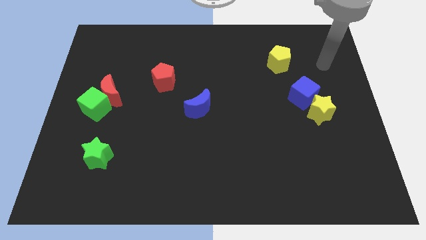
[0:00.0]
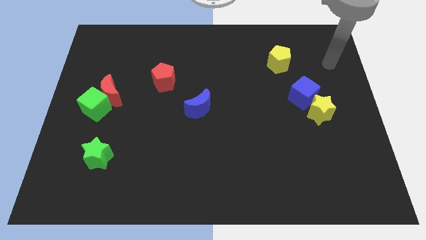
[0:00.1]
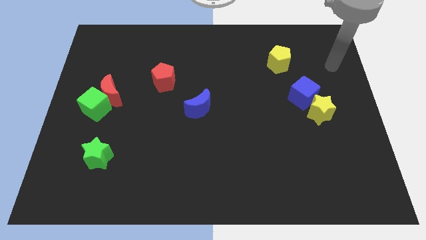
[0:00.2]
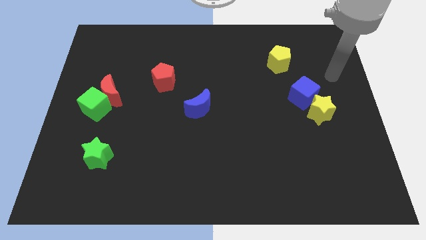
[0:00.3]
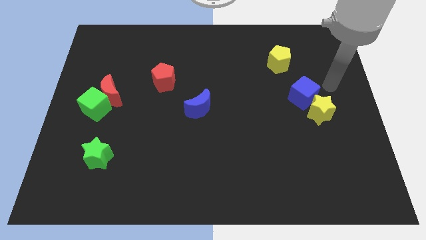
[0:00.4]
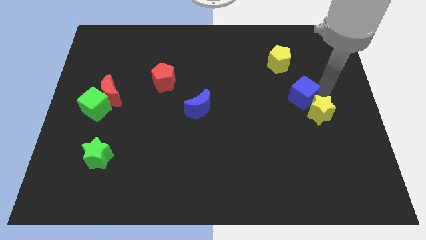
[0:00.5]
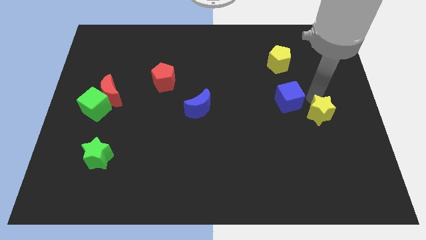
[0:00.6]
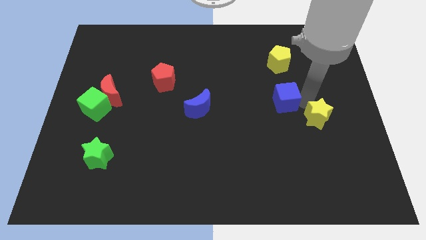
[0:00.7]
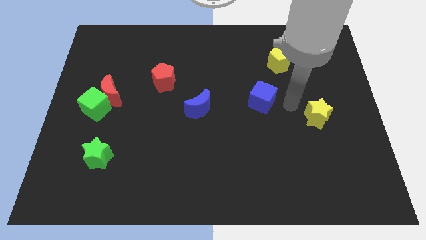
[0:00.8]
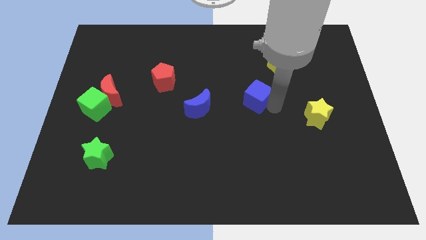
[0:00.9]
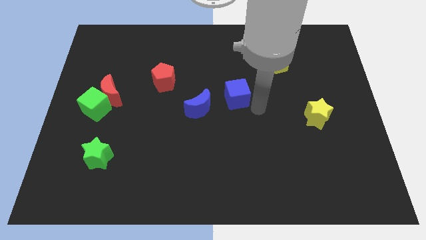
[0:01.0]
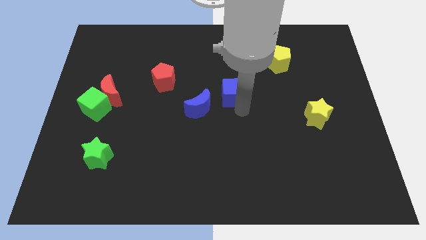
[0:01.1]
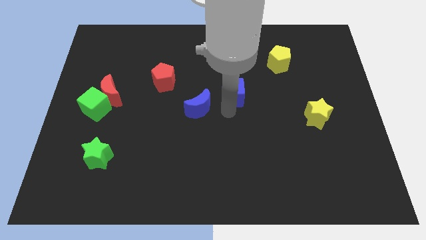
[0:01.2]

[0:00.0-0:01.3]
place the blue cube at the center of the board

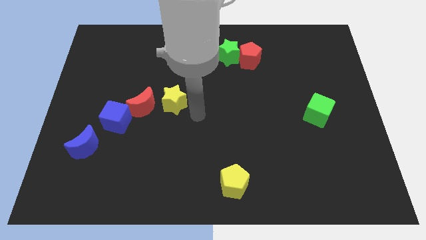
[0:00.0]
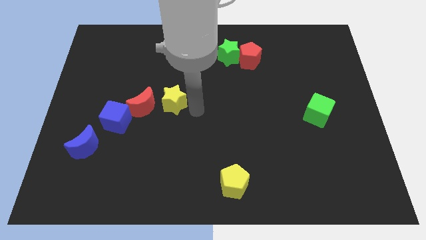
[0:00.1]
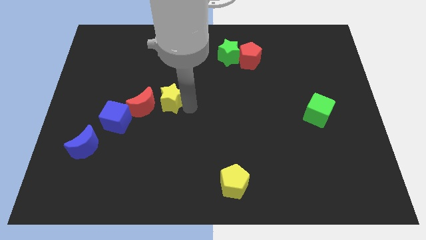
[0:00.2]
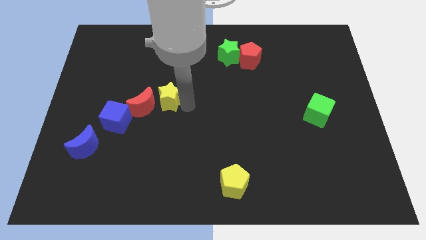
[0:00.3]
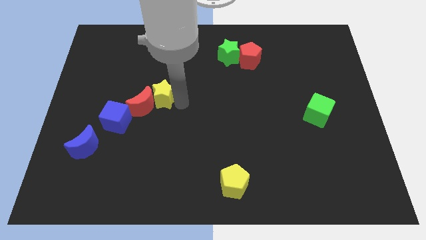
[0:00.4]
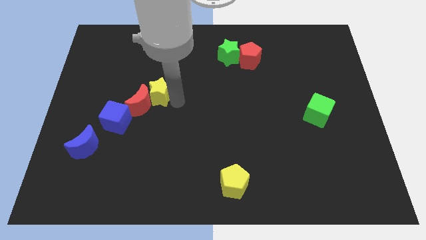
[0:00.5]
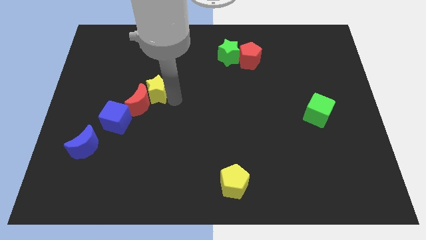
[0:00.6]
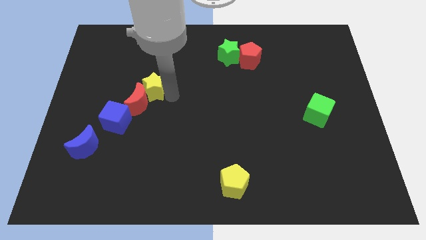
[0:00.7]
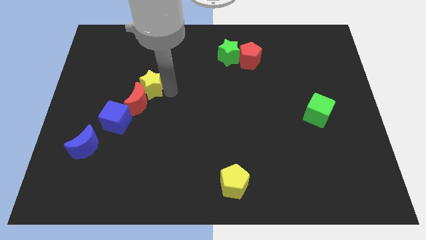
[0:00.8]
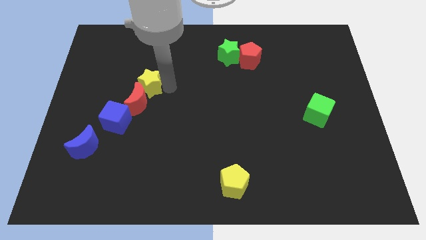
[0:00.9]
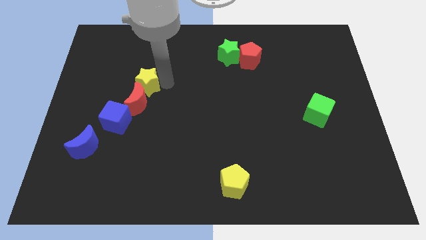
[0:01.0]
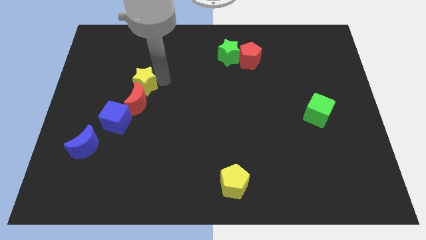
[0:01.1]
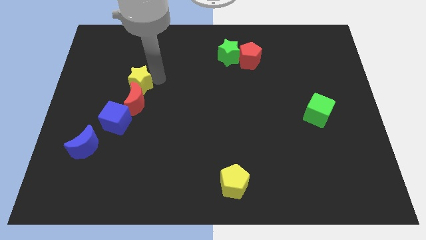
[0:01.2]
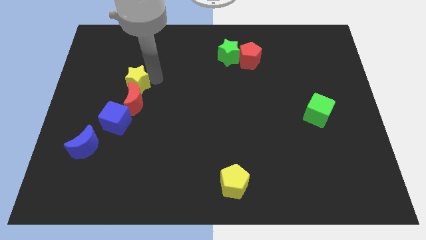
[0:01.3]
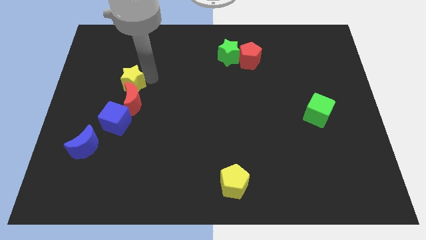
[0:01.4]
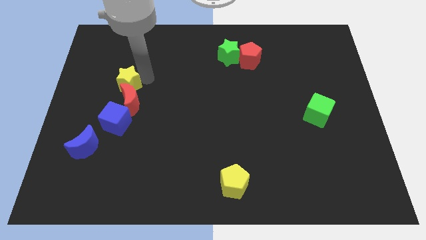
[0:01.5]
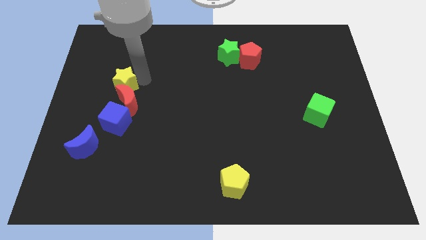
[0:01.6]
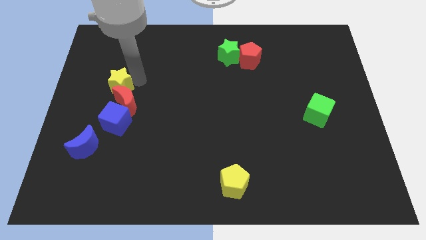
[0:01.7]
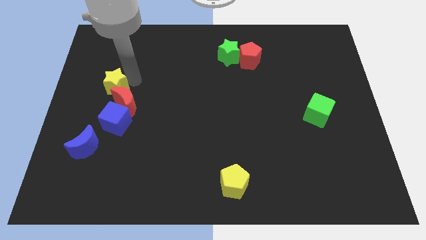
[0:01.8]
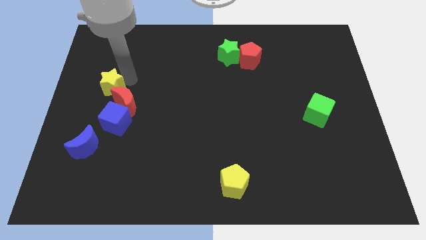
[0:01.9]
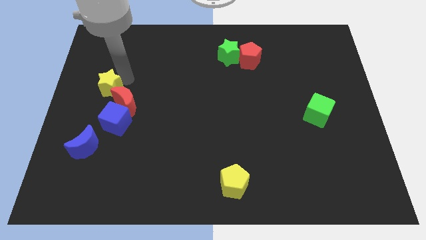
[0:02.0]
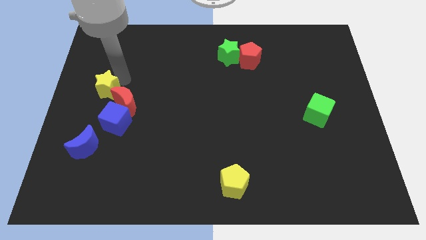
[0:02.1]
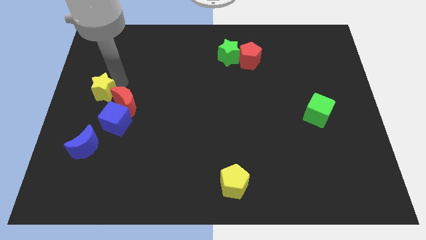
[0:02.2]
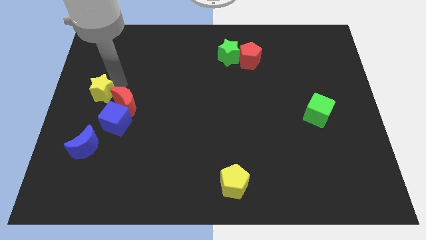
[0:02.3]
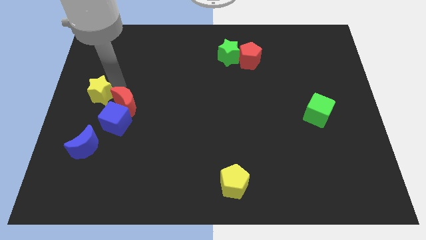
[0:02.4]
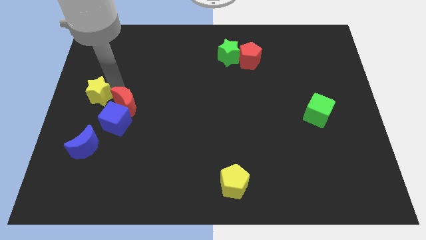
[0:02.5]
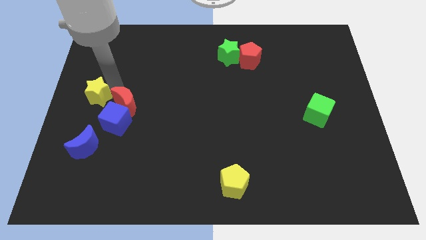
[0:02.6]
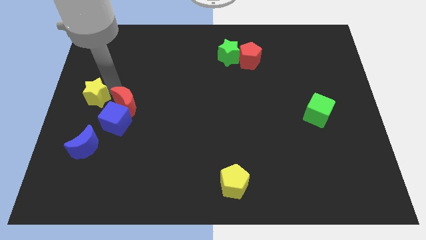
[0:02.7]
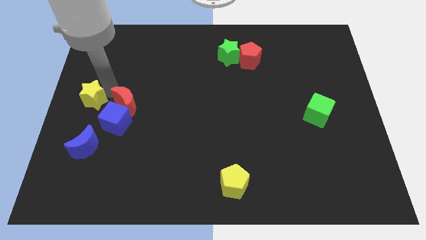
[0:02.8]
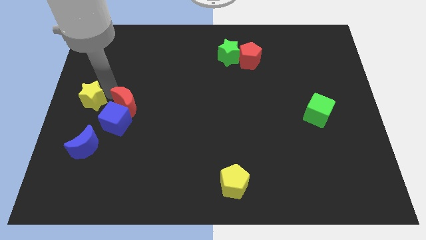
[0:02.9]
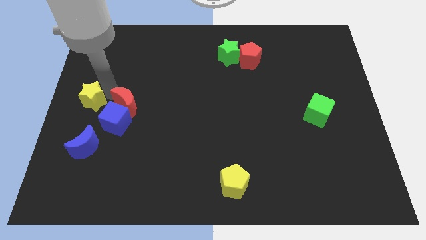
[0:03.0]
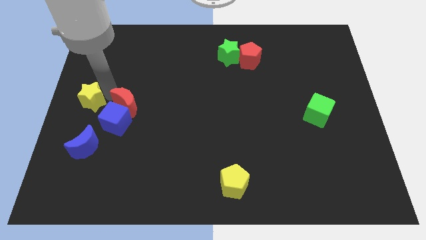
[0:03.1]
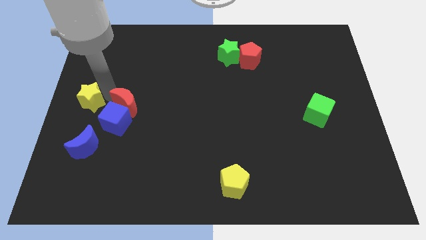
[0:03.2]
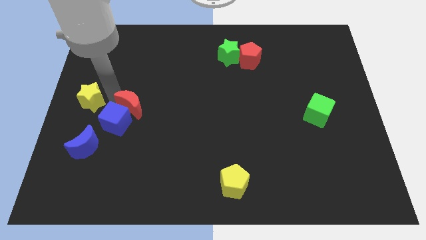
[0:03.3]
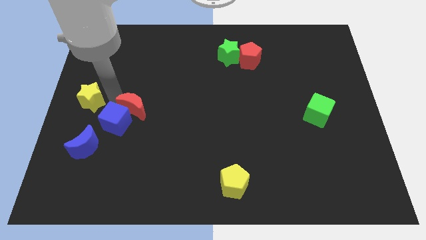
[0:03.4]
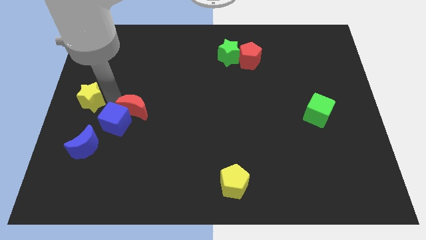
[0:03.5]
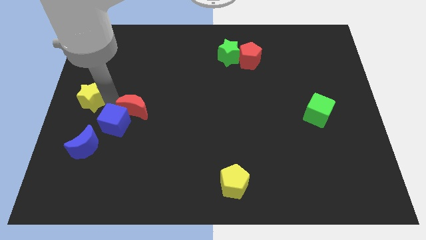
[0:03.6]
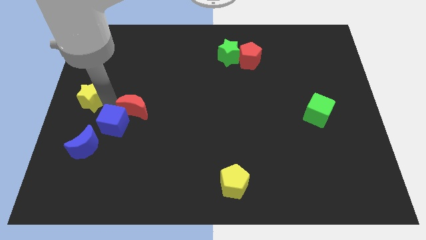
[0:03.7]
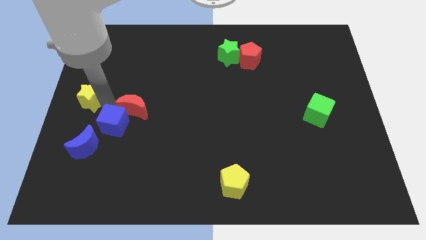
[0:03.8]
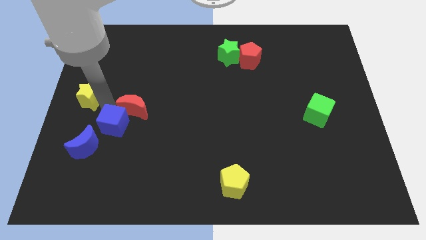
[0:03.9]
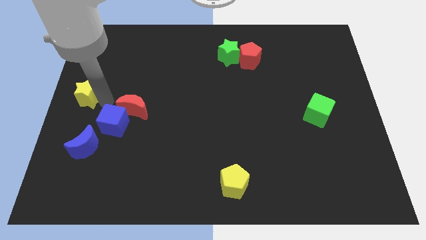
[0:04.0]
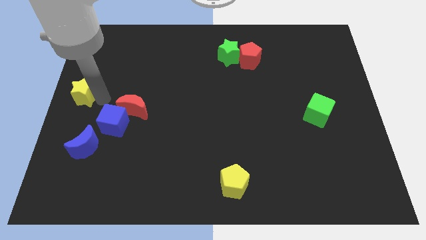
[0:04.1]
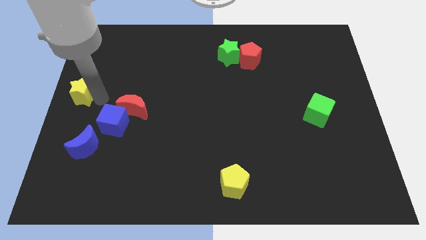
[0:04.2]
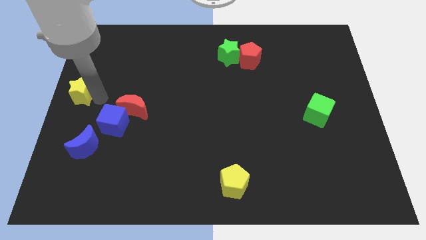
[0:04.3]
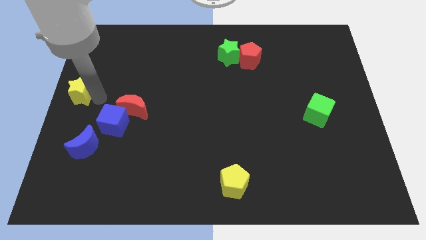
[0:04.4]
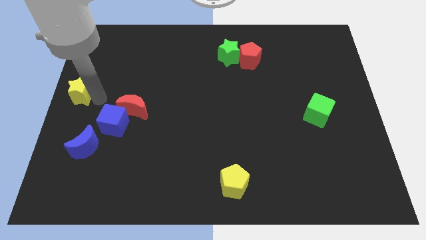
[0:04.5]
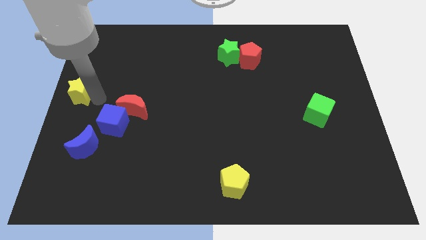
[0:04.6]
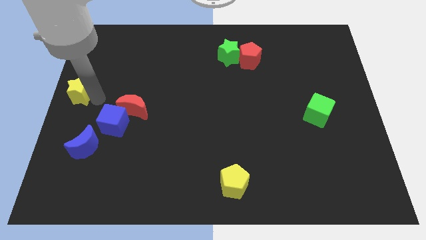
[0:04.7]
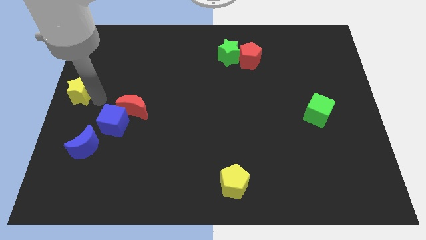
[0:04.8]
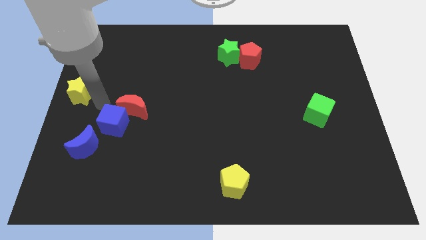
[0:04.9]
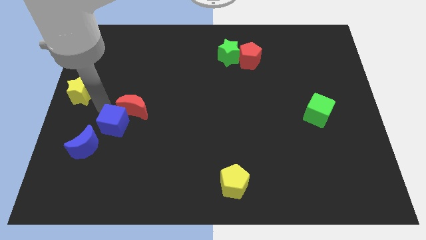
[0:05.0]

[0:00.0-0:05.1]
place the yellow star to the center left of board

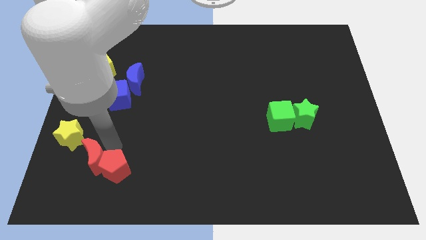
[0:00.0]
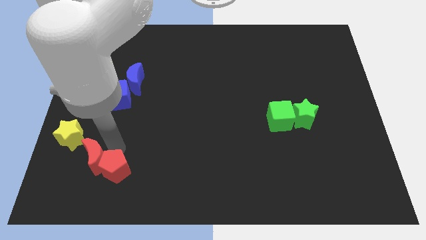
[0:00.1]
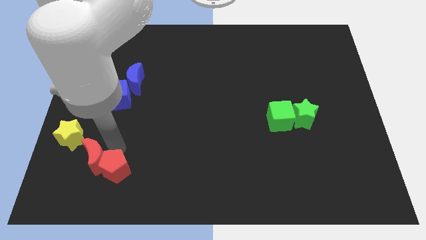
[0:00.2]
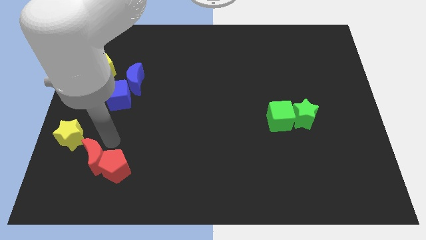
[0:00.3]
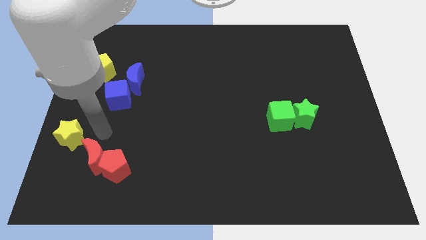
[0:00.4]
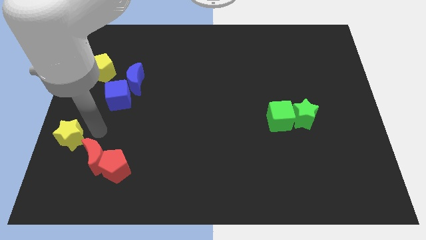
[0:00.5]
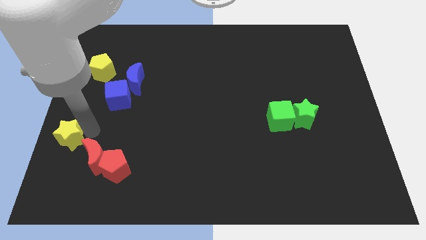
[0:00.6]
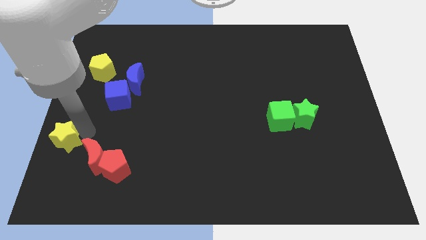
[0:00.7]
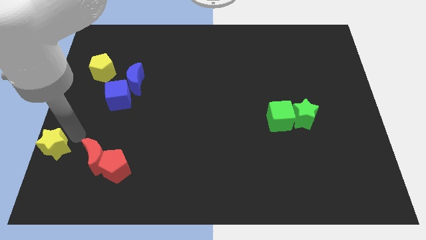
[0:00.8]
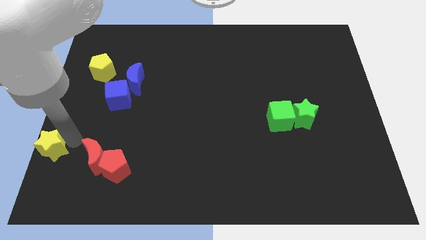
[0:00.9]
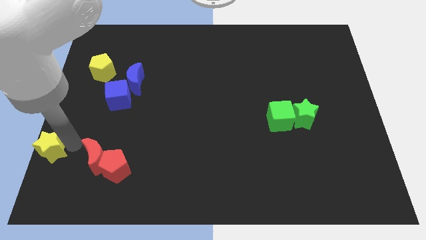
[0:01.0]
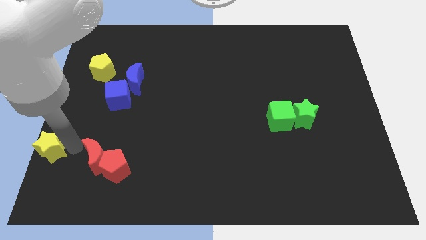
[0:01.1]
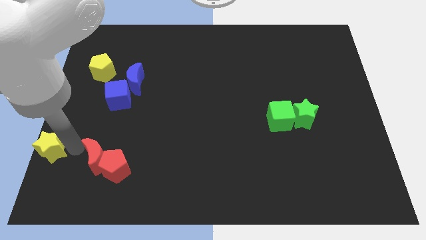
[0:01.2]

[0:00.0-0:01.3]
move the yellow star to the right corner

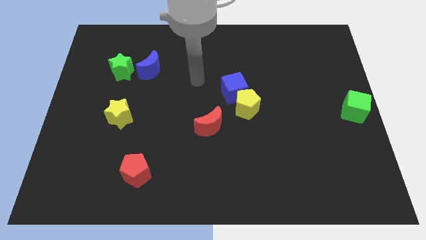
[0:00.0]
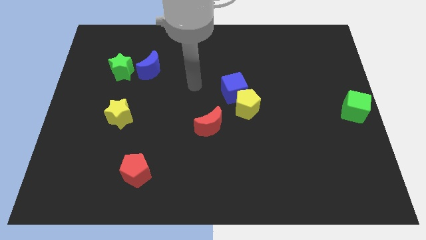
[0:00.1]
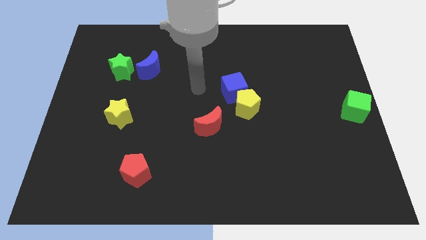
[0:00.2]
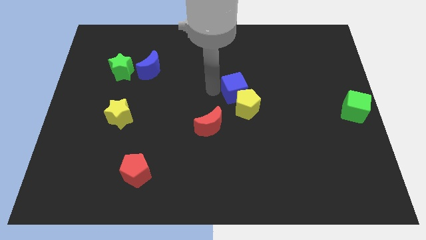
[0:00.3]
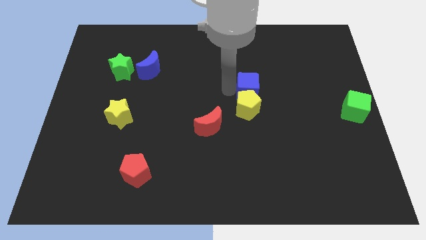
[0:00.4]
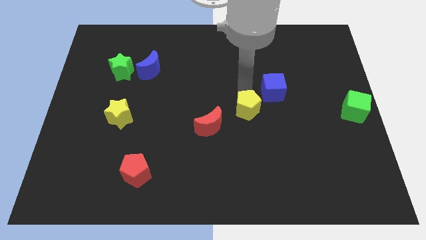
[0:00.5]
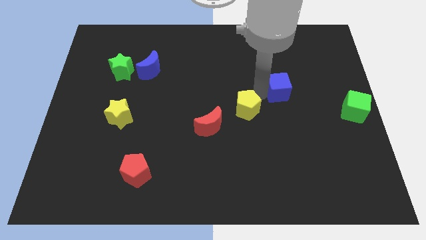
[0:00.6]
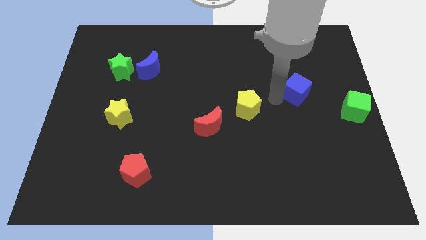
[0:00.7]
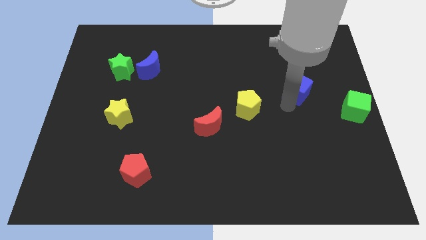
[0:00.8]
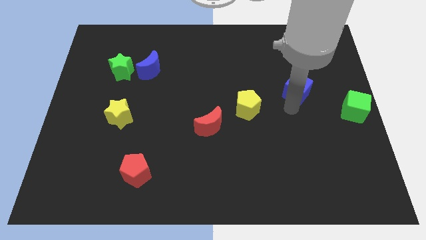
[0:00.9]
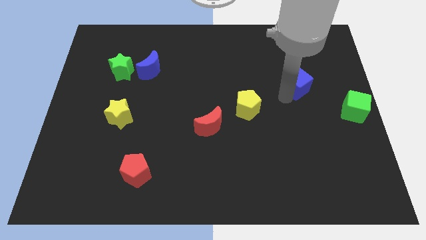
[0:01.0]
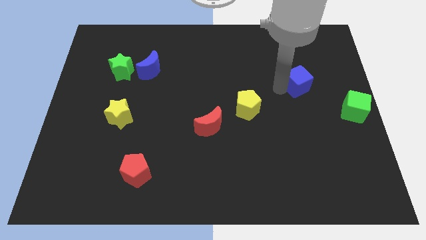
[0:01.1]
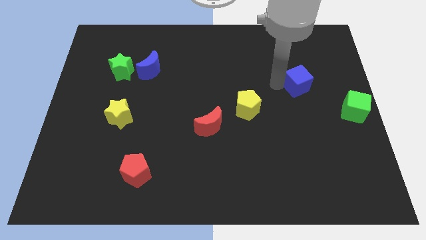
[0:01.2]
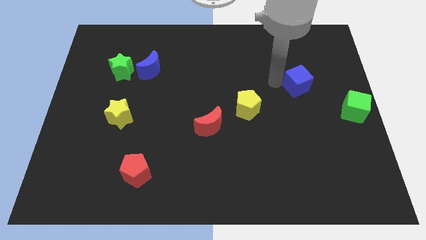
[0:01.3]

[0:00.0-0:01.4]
separate the blue cube from yellow pentagon
